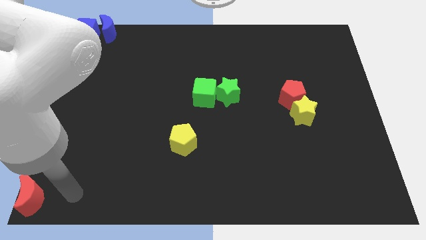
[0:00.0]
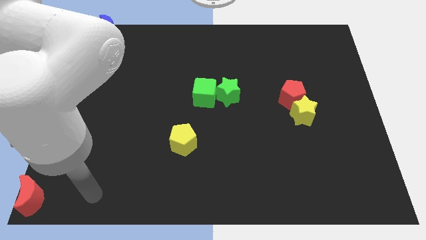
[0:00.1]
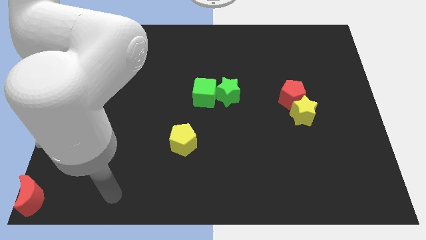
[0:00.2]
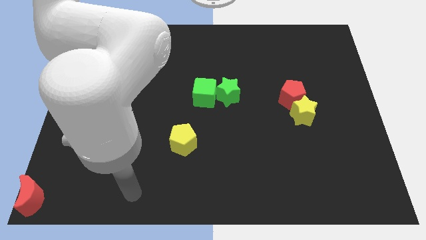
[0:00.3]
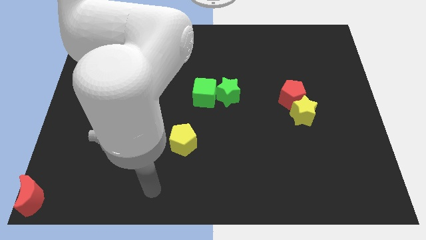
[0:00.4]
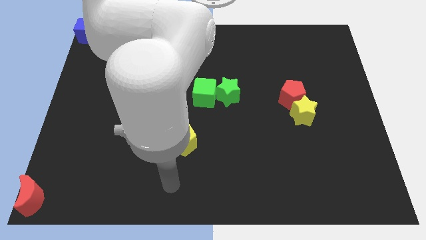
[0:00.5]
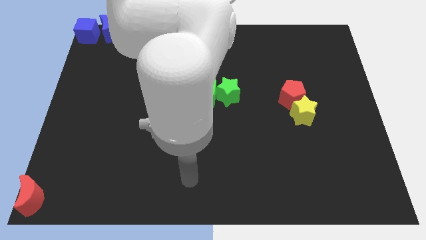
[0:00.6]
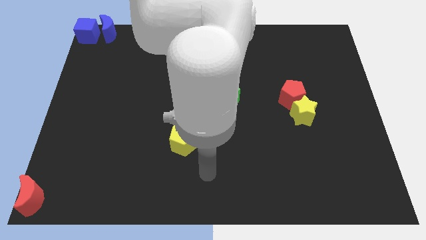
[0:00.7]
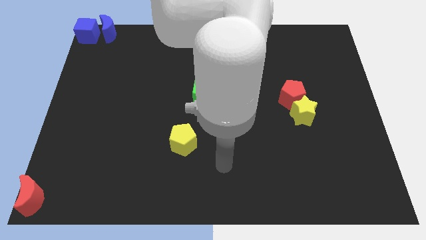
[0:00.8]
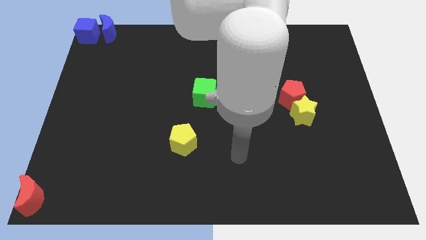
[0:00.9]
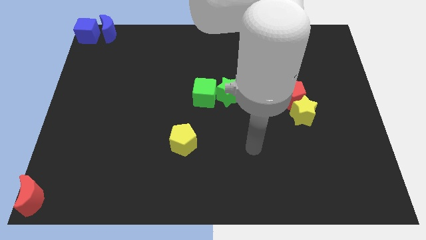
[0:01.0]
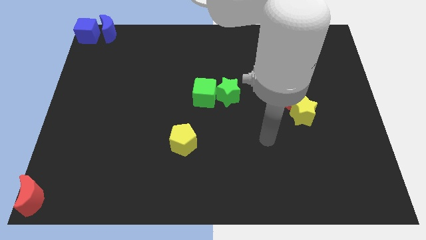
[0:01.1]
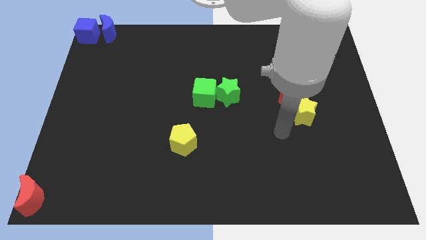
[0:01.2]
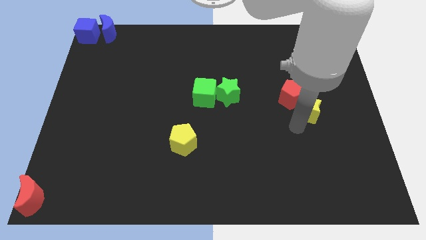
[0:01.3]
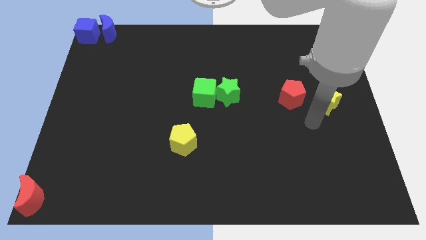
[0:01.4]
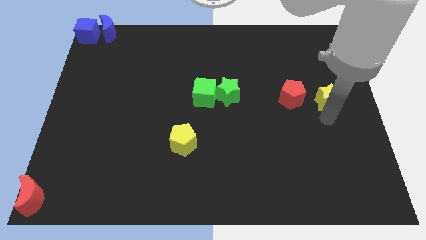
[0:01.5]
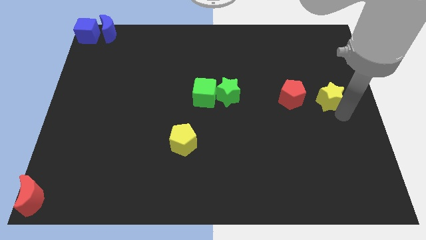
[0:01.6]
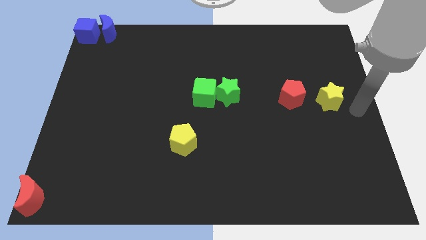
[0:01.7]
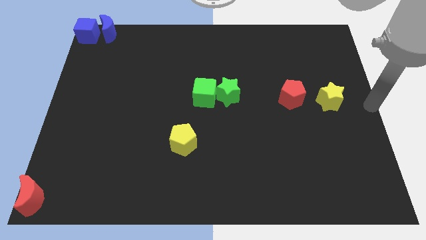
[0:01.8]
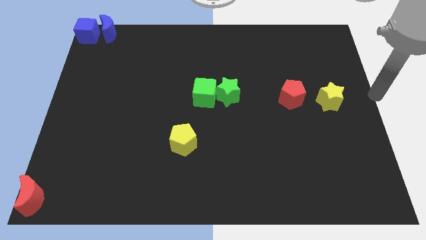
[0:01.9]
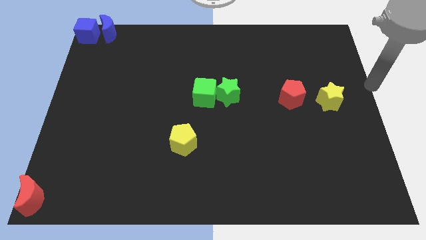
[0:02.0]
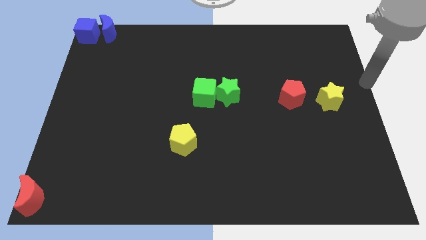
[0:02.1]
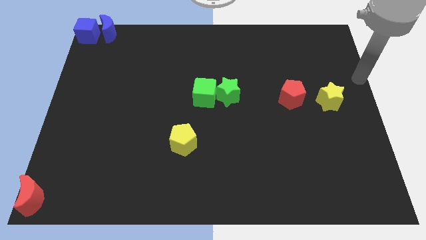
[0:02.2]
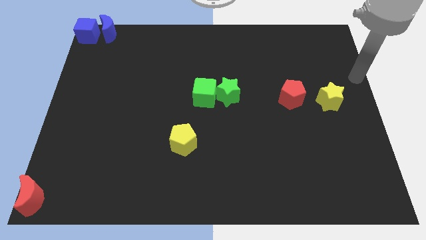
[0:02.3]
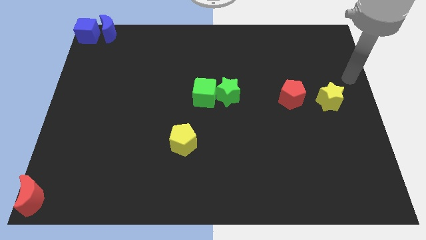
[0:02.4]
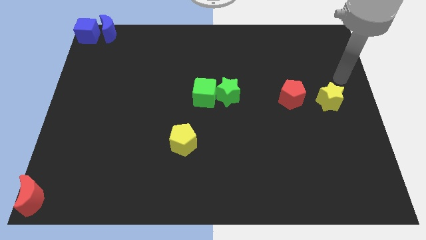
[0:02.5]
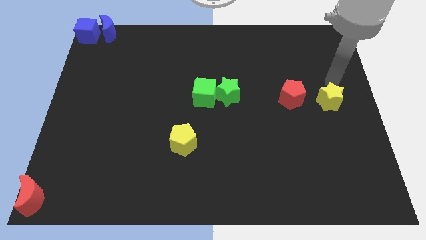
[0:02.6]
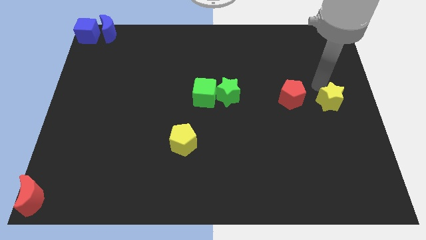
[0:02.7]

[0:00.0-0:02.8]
move your arm away from the red moon

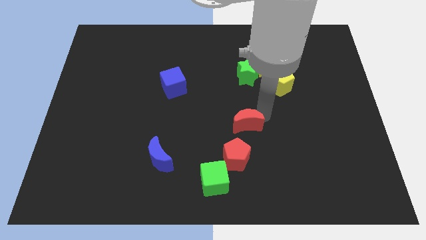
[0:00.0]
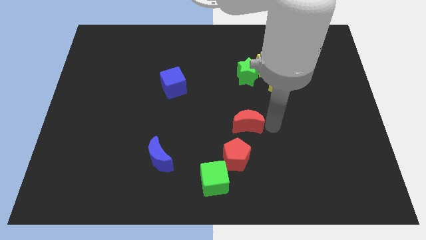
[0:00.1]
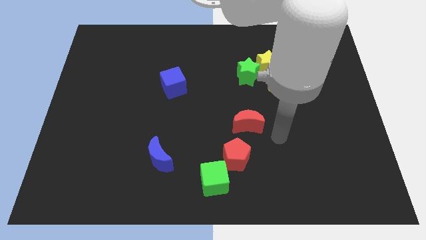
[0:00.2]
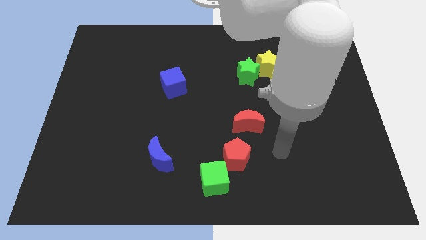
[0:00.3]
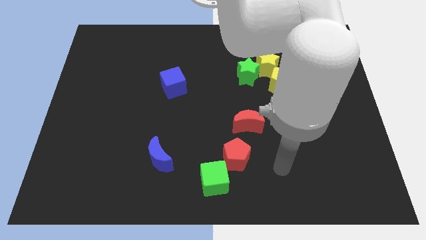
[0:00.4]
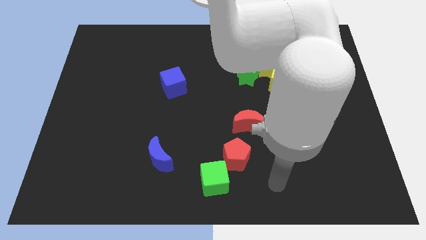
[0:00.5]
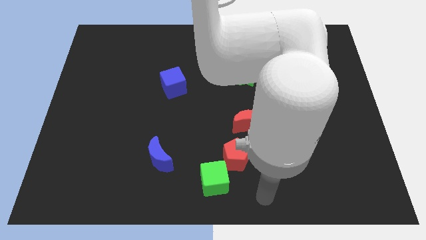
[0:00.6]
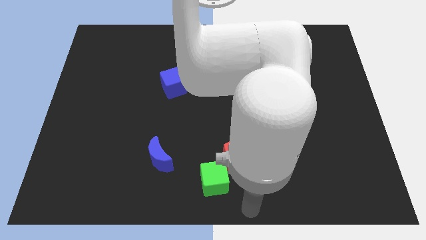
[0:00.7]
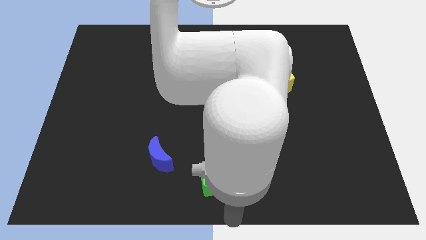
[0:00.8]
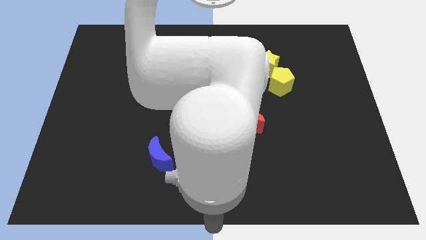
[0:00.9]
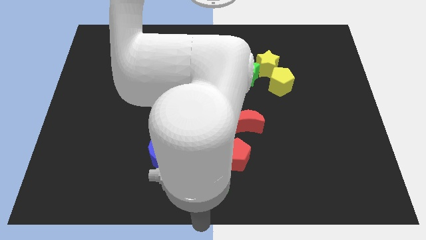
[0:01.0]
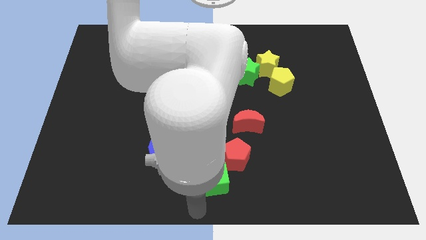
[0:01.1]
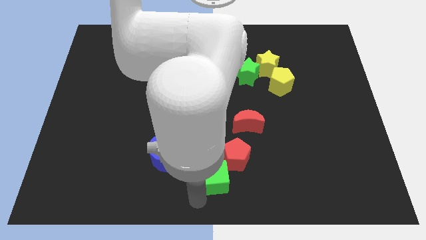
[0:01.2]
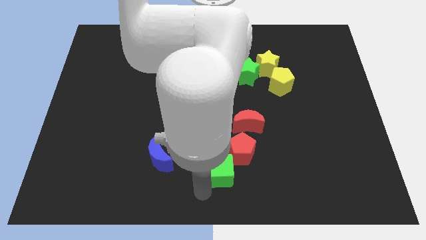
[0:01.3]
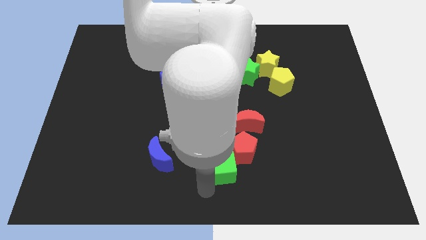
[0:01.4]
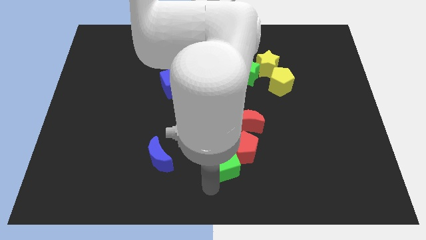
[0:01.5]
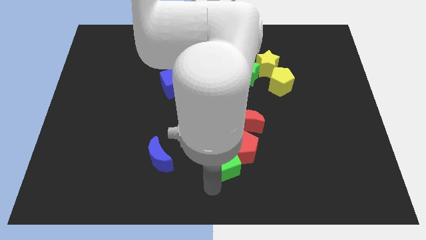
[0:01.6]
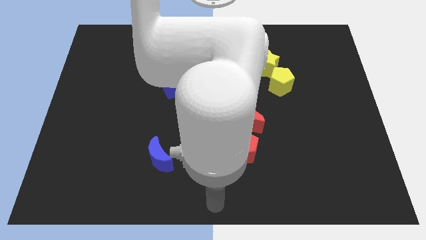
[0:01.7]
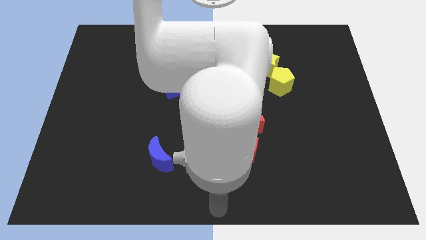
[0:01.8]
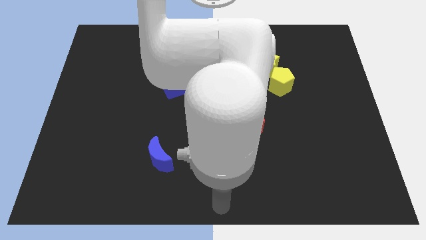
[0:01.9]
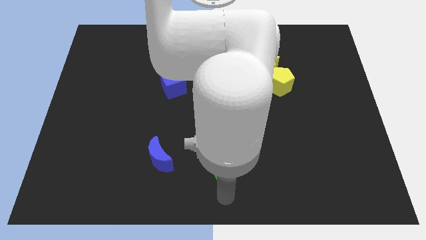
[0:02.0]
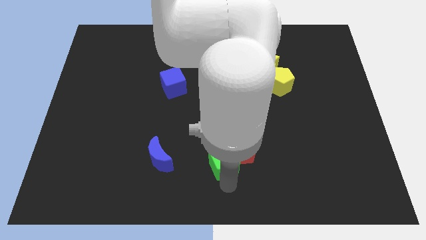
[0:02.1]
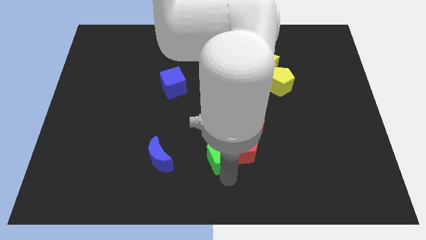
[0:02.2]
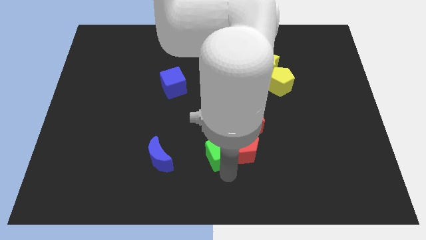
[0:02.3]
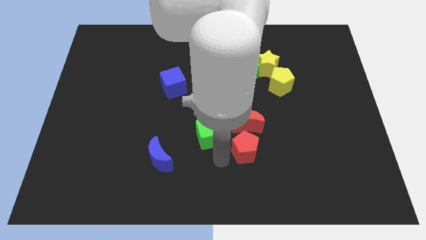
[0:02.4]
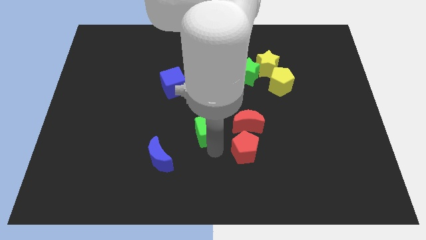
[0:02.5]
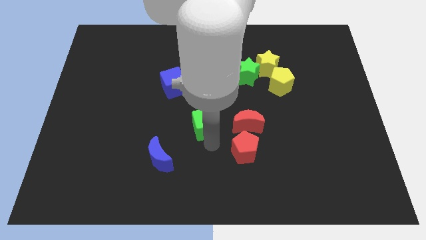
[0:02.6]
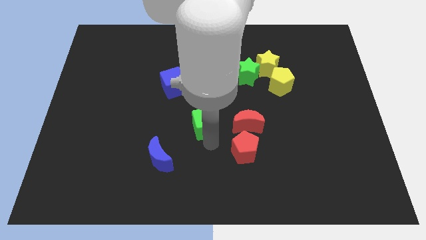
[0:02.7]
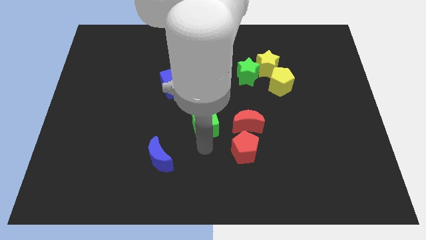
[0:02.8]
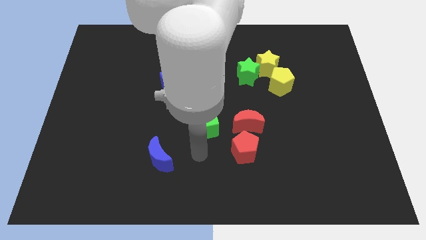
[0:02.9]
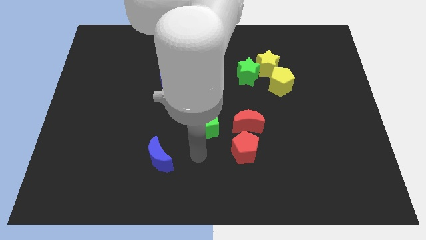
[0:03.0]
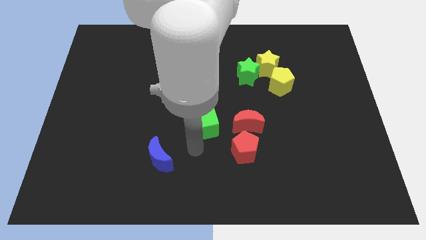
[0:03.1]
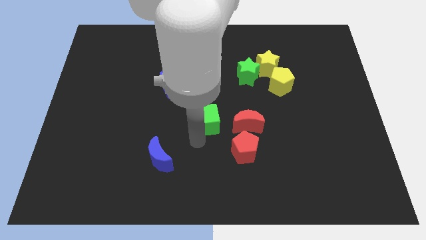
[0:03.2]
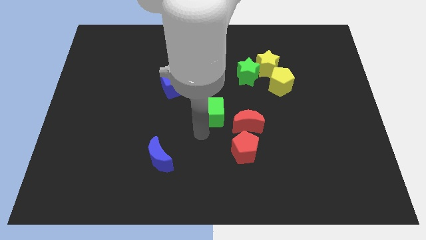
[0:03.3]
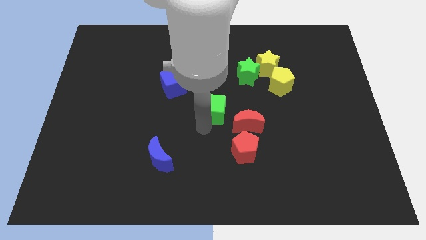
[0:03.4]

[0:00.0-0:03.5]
push the green cube diagonally top left to the red pentagon

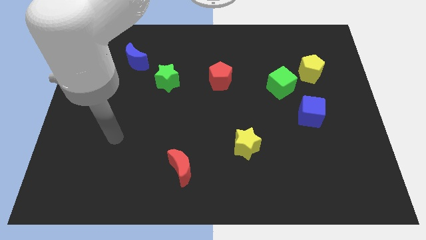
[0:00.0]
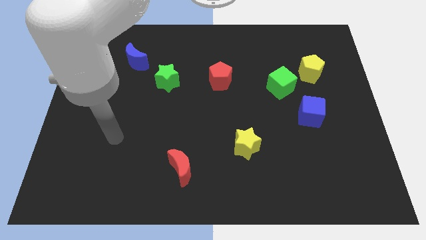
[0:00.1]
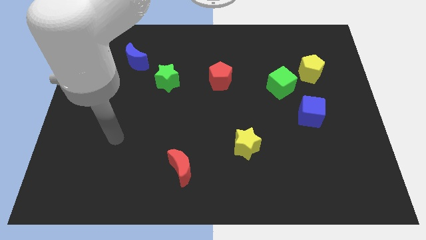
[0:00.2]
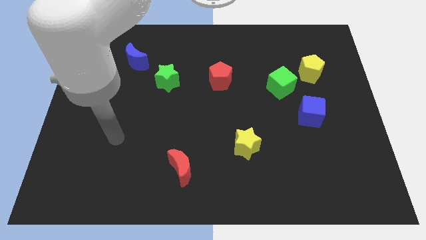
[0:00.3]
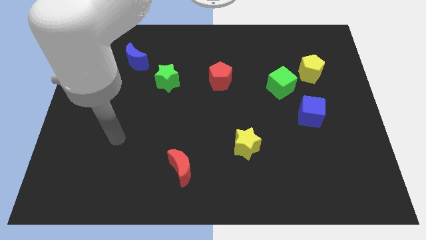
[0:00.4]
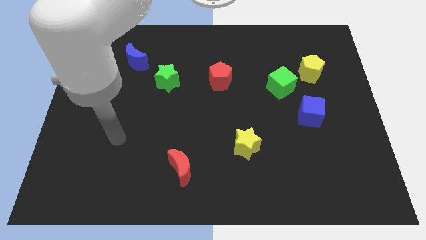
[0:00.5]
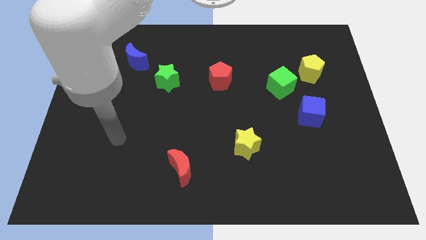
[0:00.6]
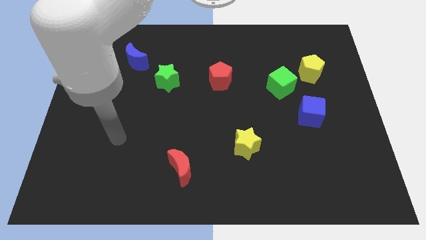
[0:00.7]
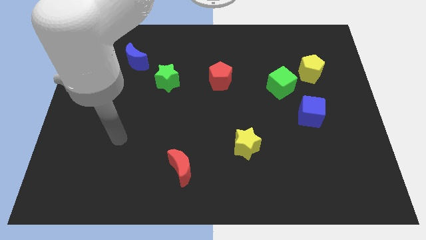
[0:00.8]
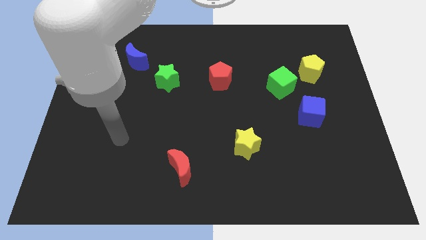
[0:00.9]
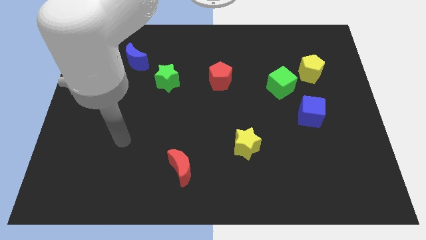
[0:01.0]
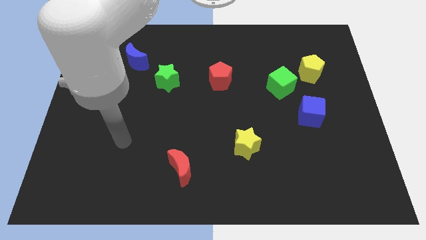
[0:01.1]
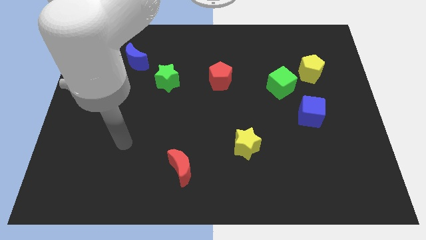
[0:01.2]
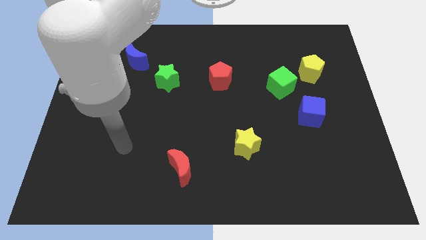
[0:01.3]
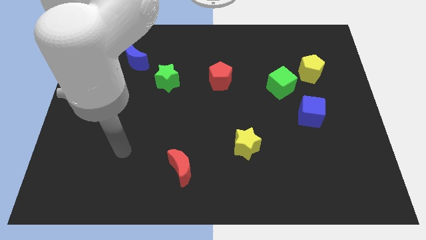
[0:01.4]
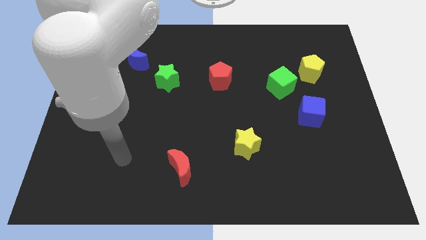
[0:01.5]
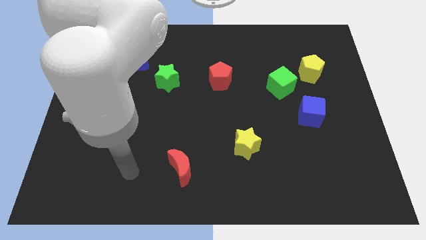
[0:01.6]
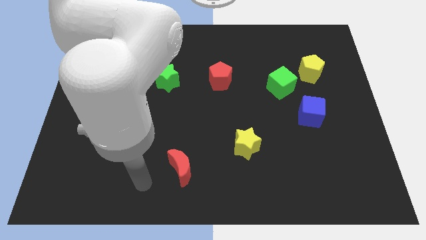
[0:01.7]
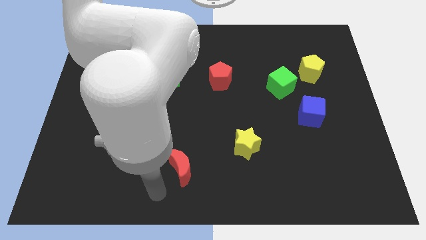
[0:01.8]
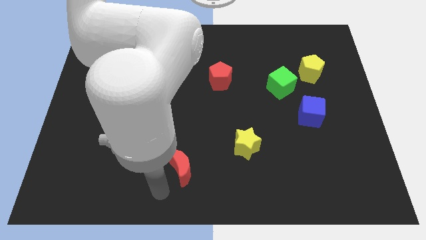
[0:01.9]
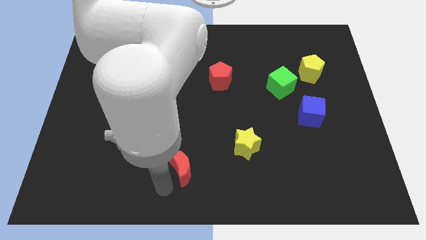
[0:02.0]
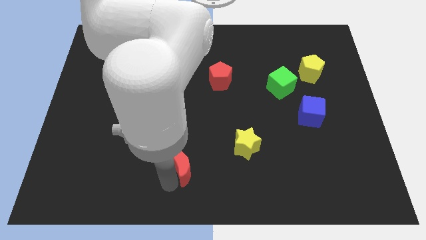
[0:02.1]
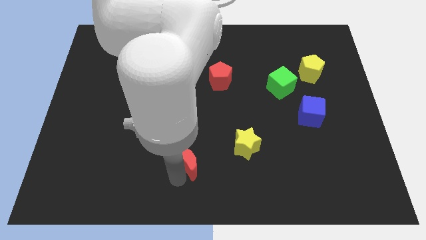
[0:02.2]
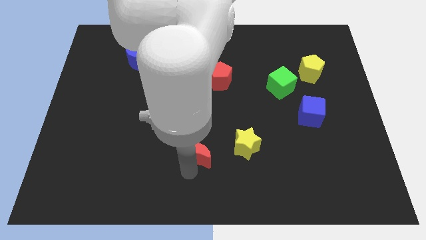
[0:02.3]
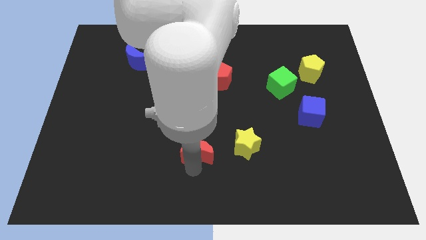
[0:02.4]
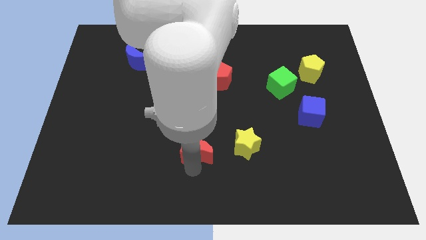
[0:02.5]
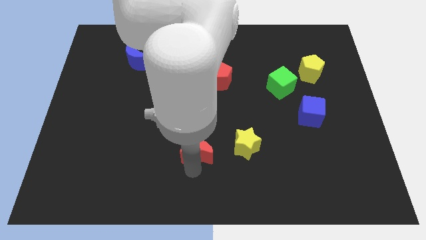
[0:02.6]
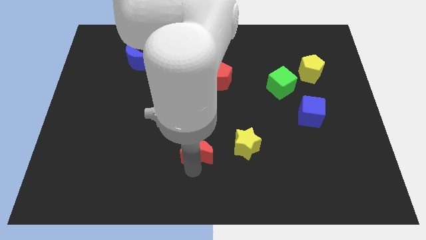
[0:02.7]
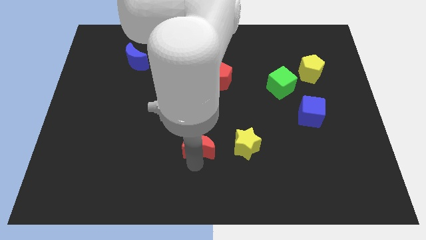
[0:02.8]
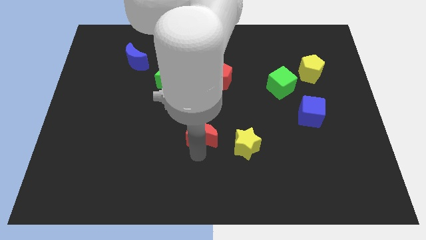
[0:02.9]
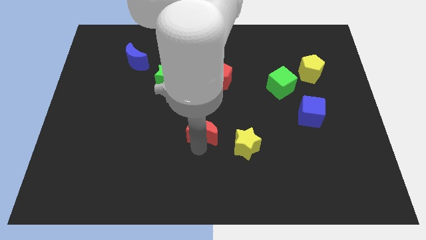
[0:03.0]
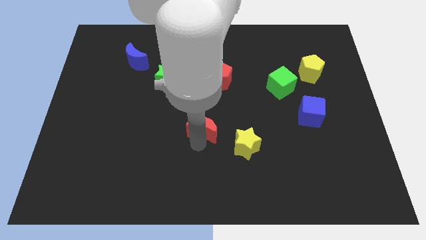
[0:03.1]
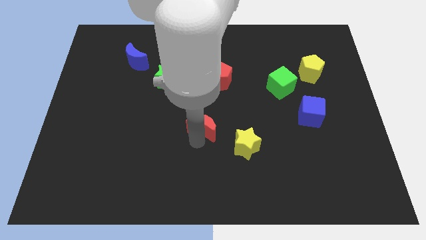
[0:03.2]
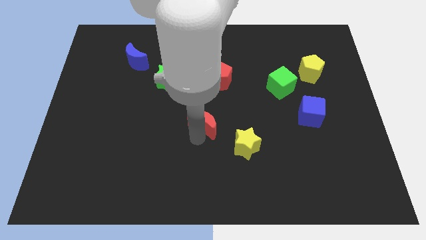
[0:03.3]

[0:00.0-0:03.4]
move the red moon diagonally on the top left side of the yellow star
